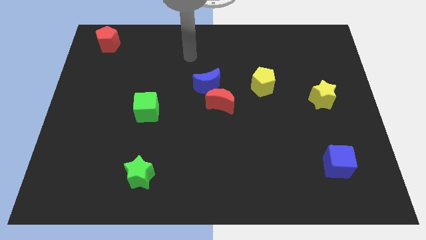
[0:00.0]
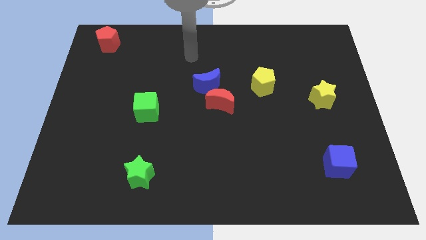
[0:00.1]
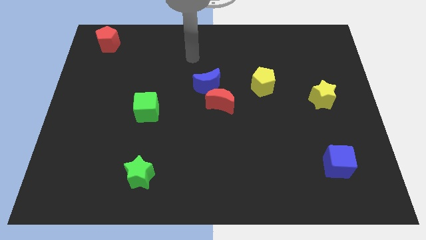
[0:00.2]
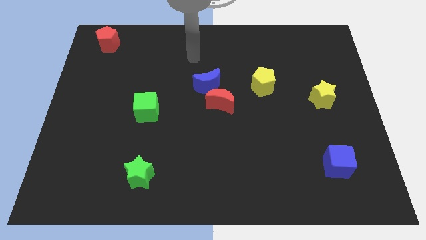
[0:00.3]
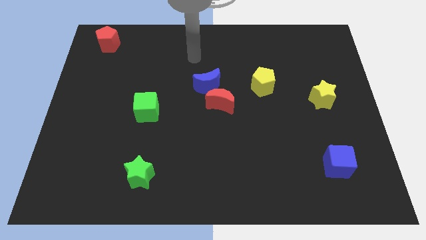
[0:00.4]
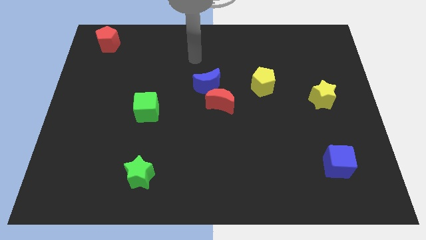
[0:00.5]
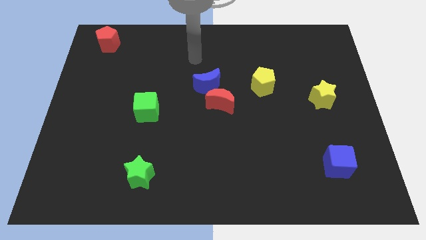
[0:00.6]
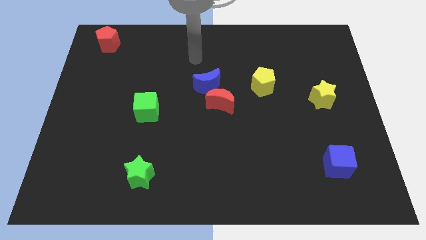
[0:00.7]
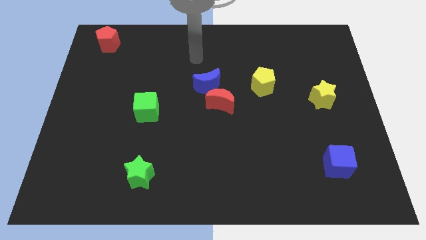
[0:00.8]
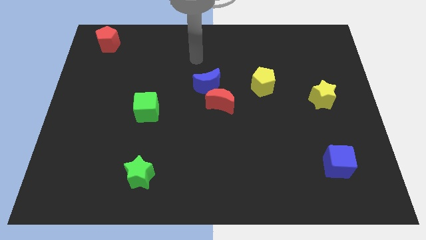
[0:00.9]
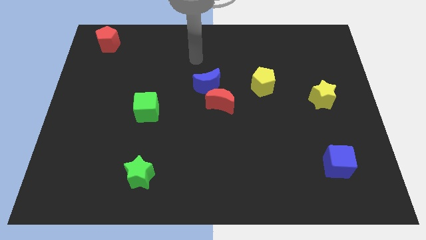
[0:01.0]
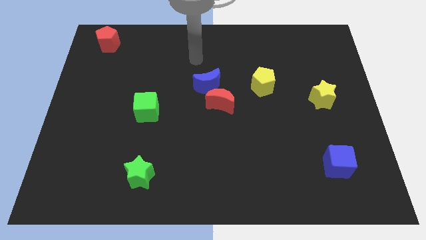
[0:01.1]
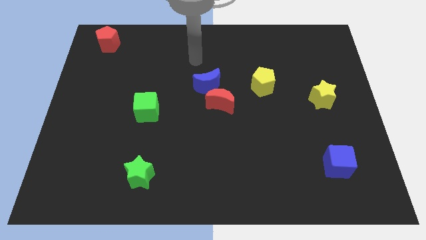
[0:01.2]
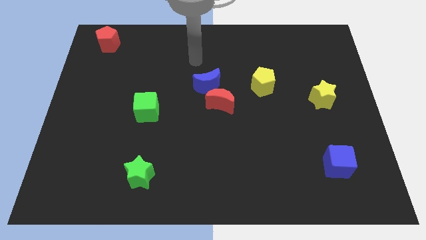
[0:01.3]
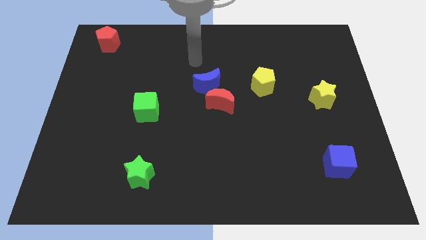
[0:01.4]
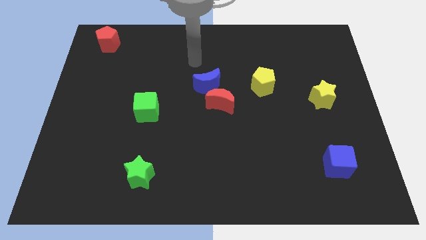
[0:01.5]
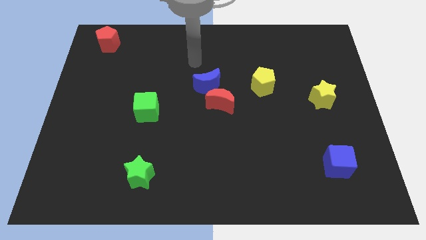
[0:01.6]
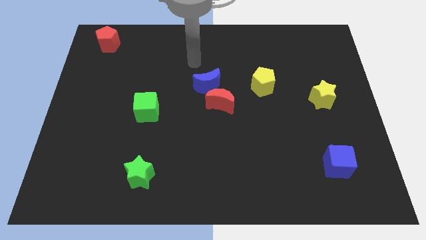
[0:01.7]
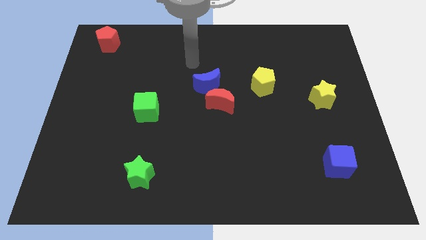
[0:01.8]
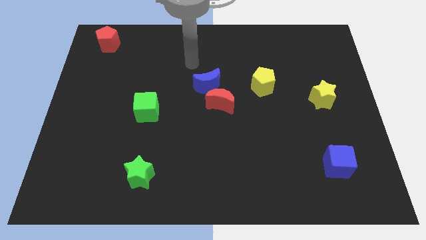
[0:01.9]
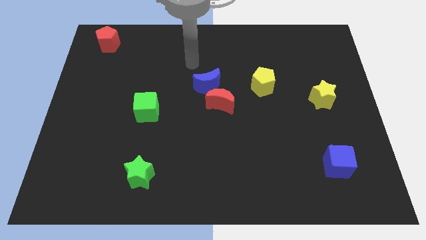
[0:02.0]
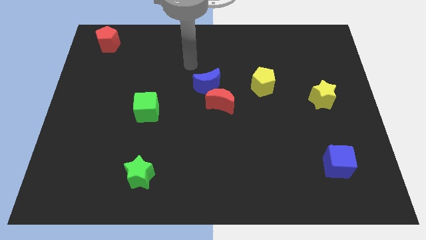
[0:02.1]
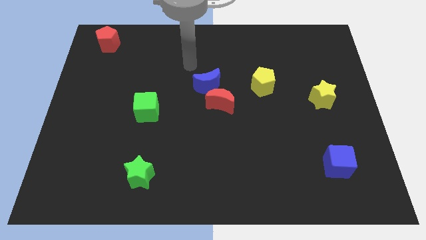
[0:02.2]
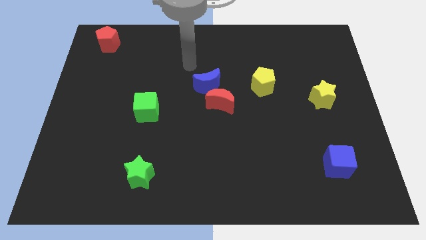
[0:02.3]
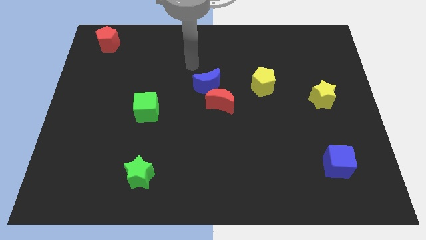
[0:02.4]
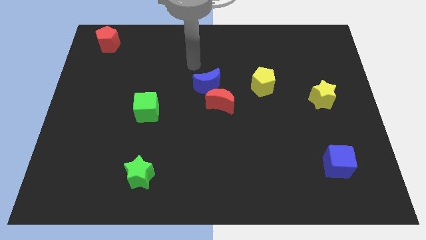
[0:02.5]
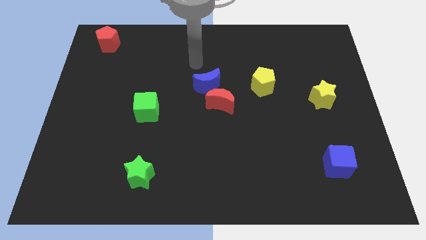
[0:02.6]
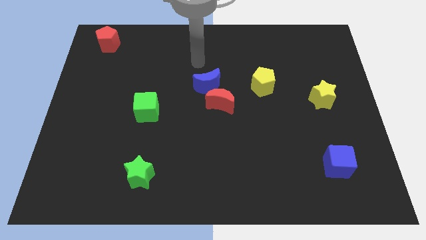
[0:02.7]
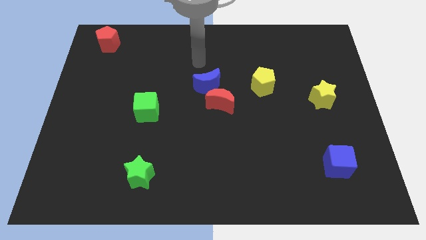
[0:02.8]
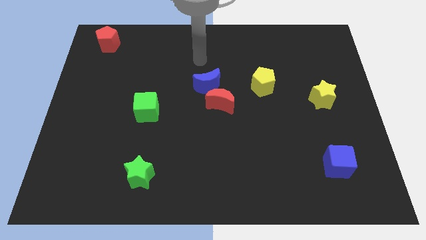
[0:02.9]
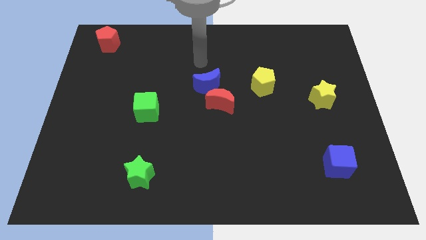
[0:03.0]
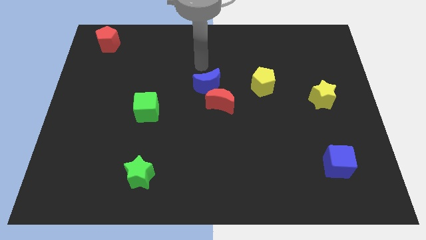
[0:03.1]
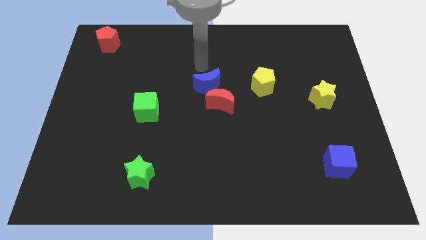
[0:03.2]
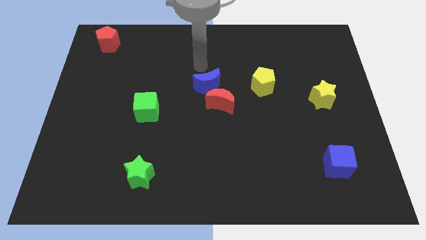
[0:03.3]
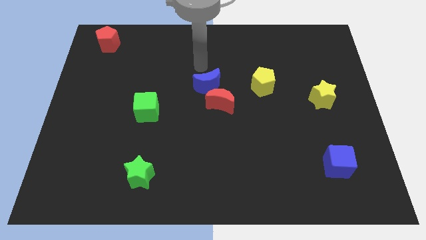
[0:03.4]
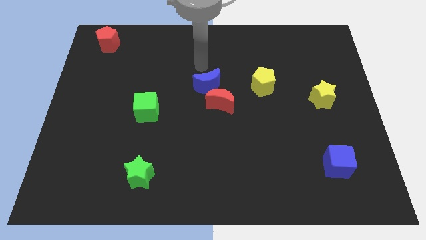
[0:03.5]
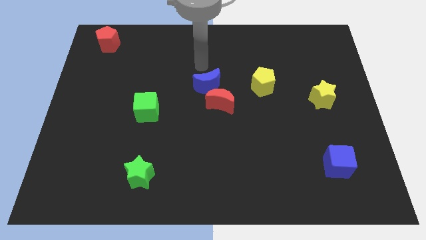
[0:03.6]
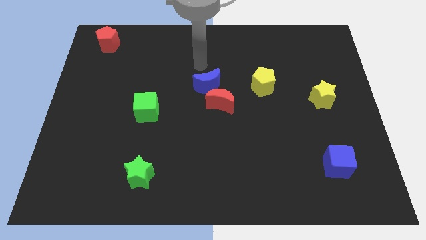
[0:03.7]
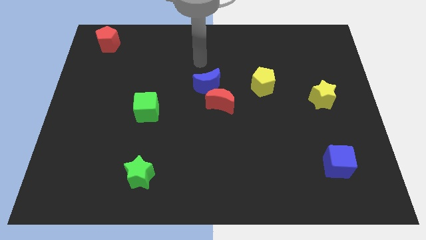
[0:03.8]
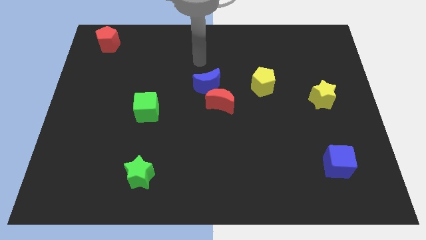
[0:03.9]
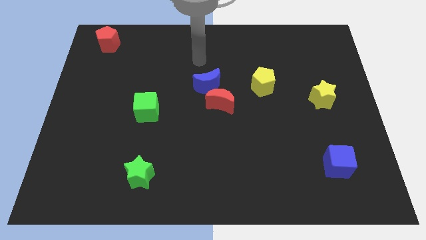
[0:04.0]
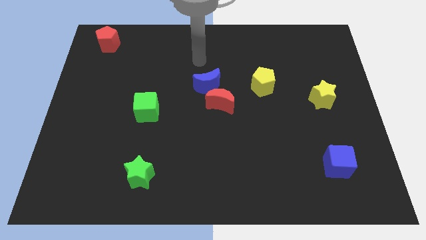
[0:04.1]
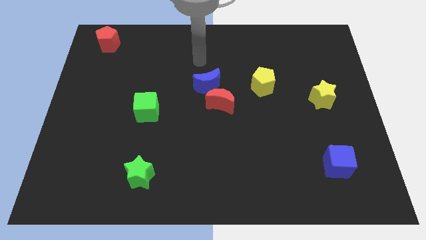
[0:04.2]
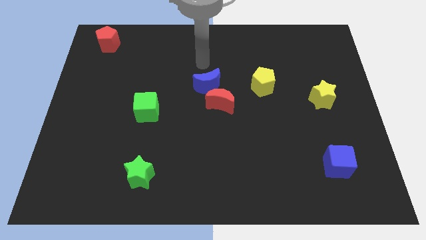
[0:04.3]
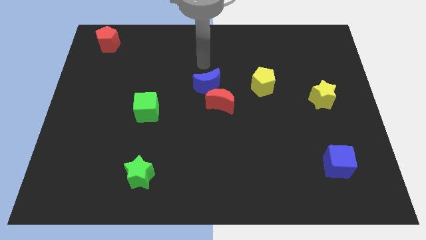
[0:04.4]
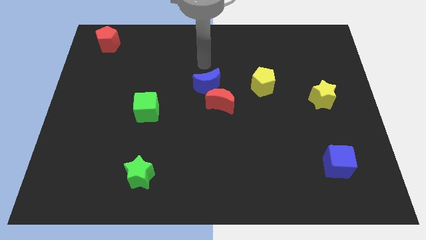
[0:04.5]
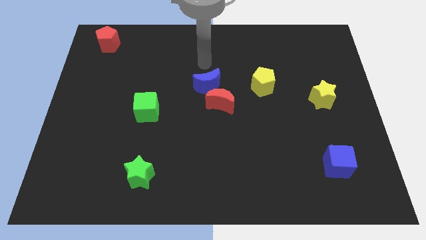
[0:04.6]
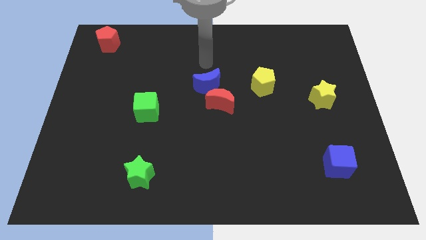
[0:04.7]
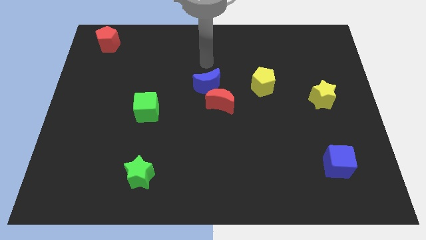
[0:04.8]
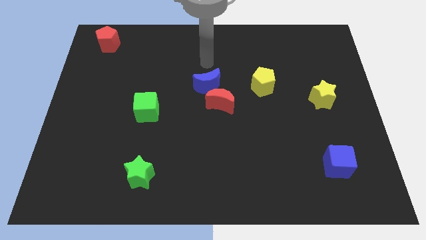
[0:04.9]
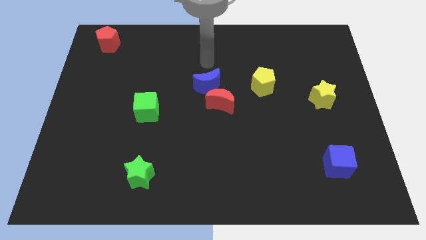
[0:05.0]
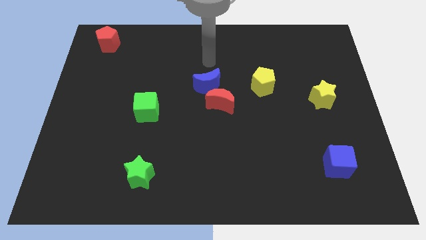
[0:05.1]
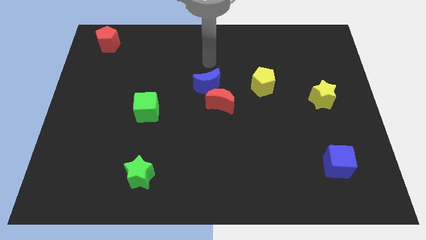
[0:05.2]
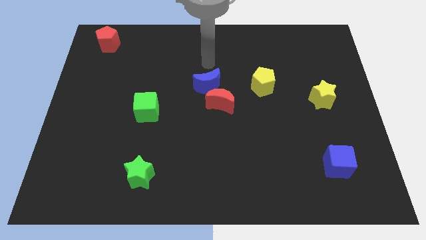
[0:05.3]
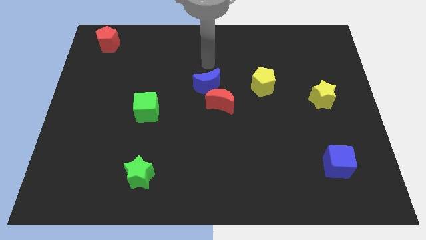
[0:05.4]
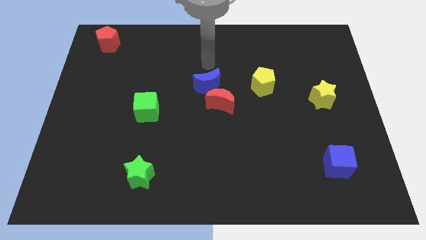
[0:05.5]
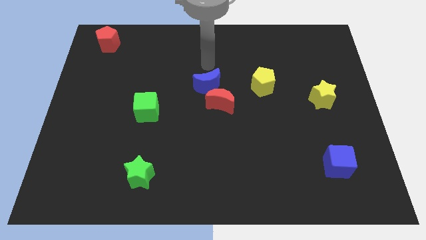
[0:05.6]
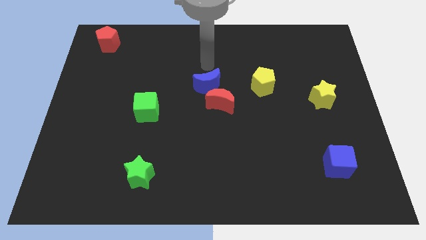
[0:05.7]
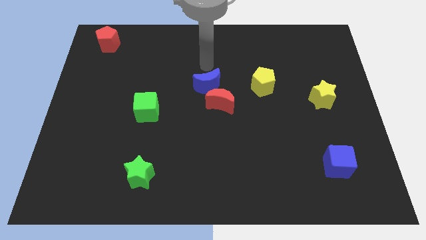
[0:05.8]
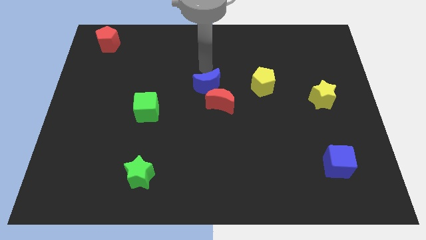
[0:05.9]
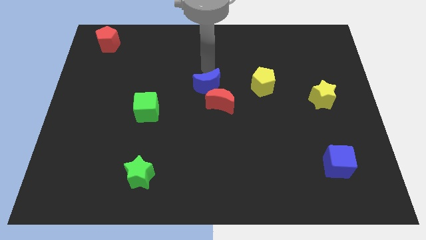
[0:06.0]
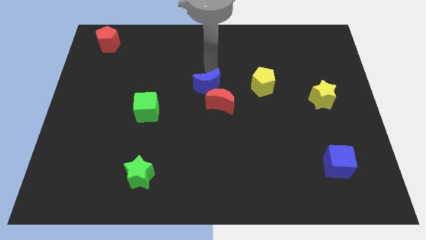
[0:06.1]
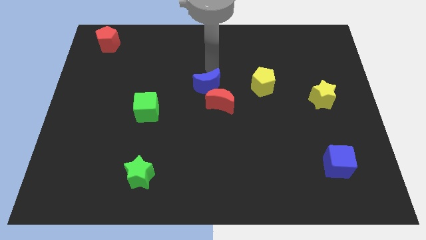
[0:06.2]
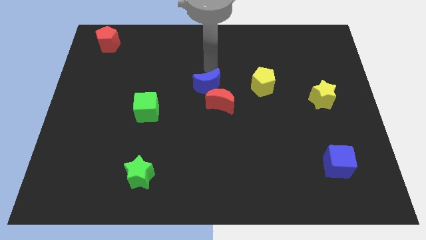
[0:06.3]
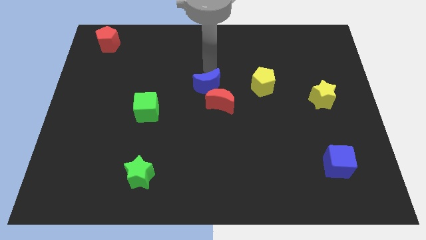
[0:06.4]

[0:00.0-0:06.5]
point your arm above the blue moon

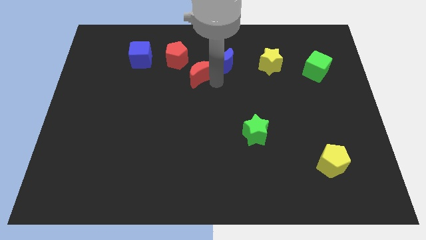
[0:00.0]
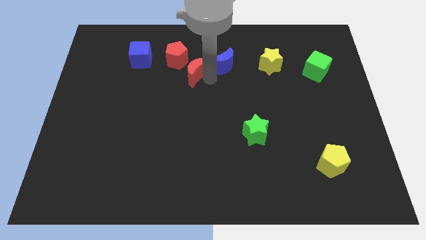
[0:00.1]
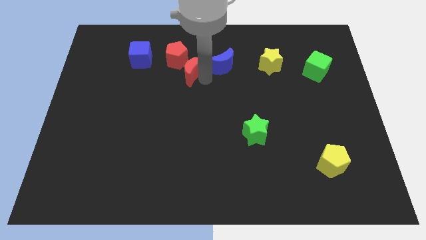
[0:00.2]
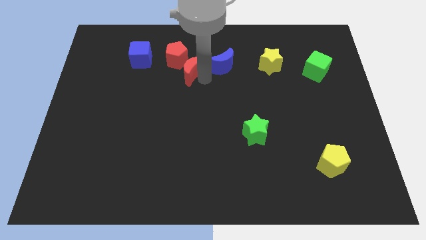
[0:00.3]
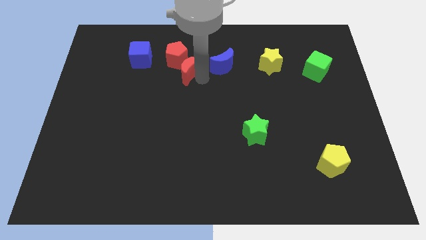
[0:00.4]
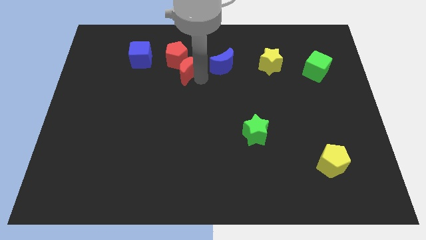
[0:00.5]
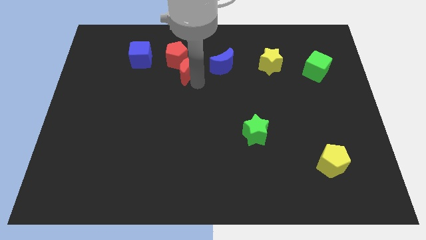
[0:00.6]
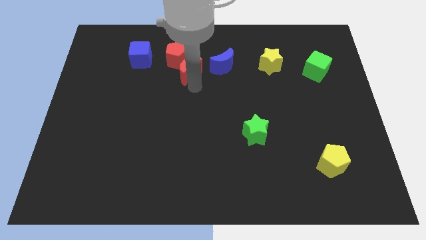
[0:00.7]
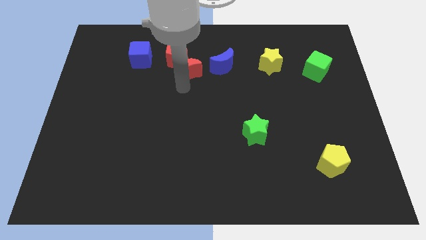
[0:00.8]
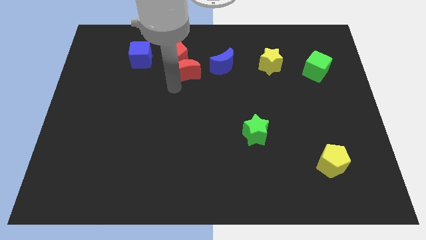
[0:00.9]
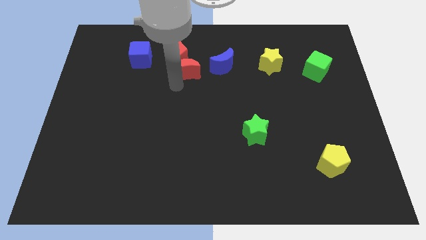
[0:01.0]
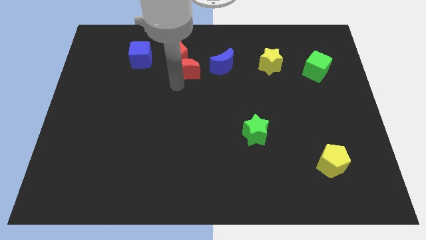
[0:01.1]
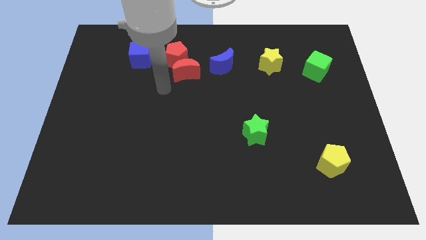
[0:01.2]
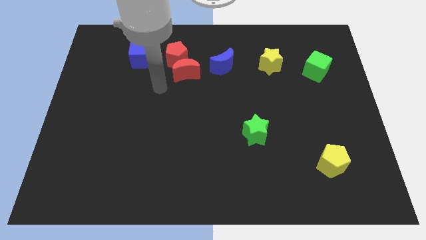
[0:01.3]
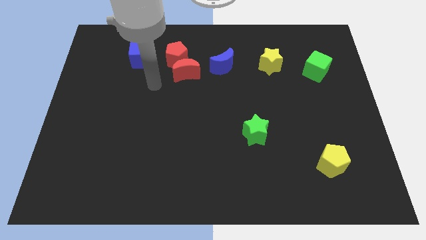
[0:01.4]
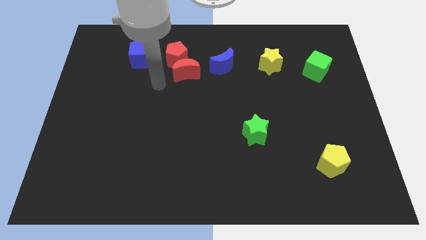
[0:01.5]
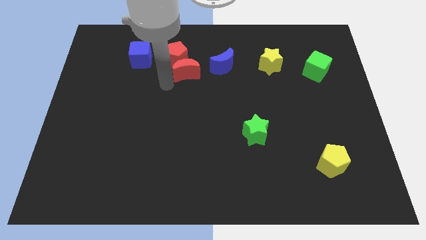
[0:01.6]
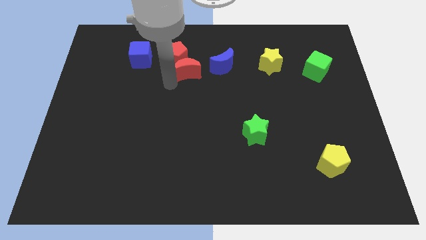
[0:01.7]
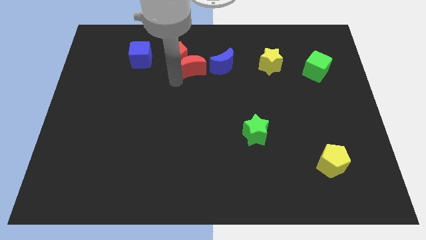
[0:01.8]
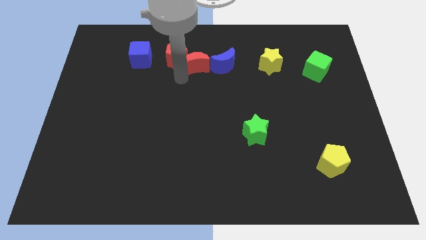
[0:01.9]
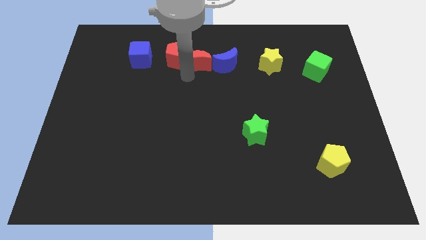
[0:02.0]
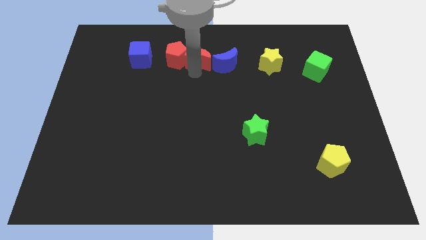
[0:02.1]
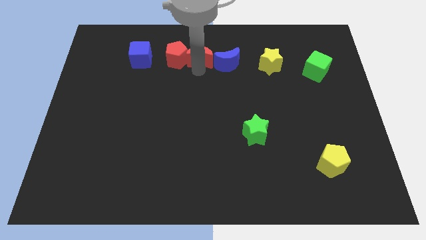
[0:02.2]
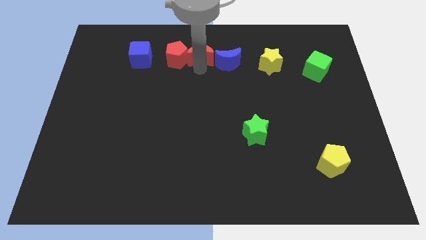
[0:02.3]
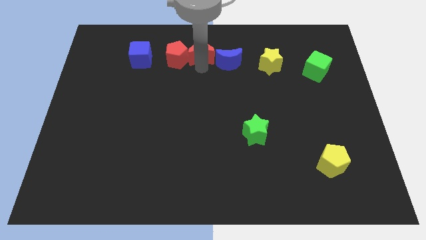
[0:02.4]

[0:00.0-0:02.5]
place the red crescent to the right of red pentagon

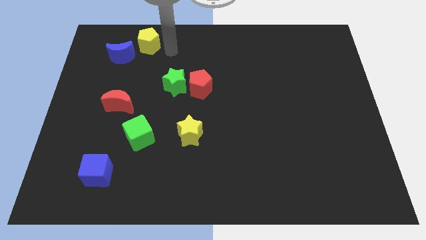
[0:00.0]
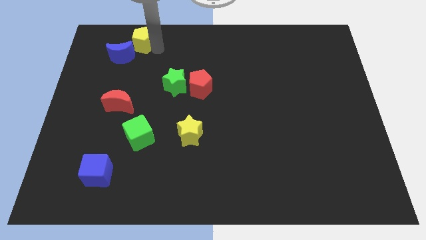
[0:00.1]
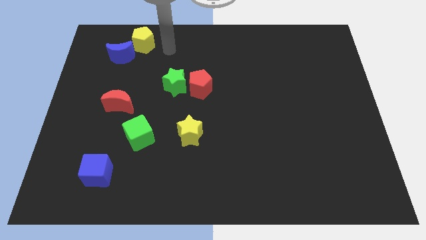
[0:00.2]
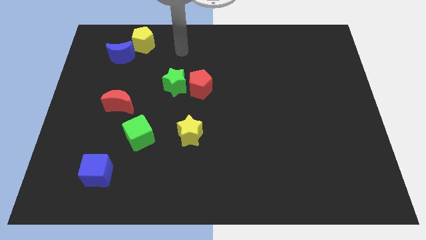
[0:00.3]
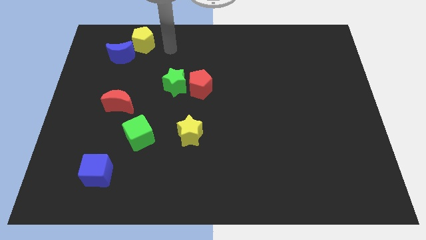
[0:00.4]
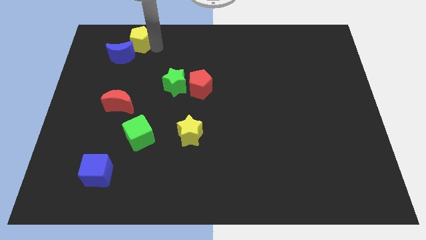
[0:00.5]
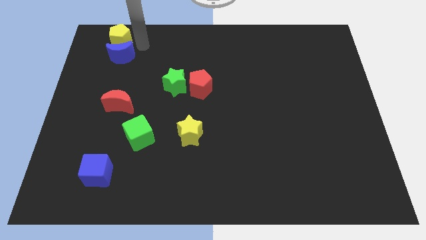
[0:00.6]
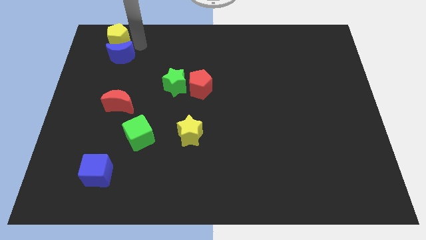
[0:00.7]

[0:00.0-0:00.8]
put a yellow pentagon at the top of blue crescent
